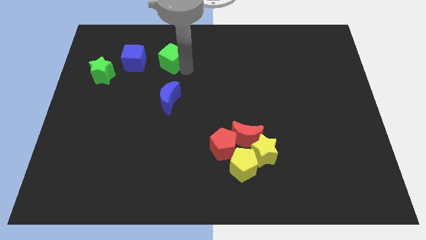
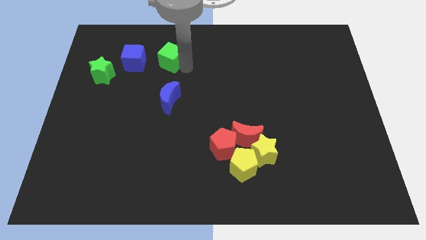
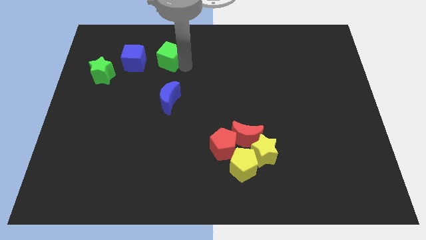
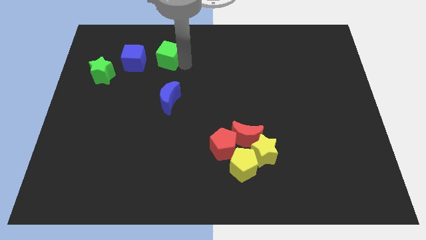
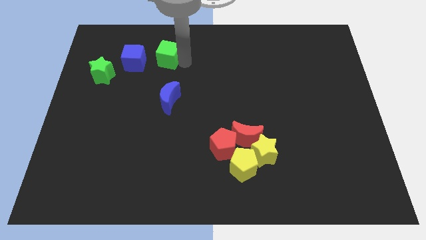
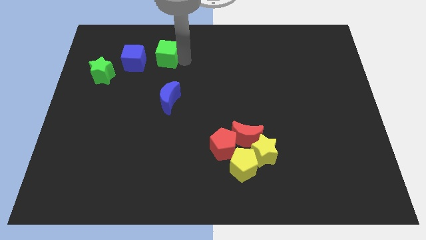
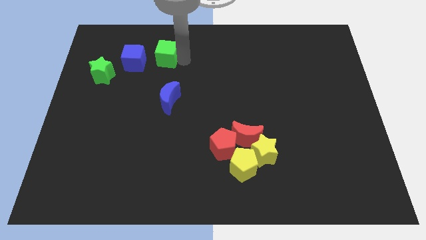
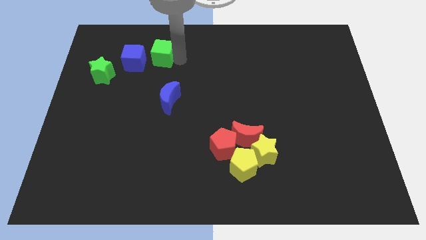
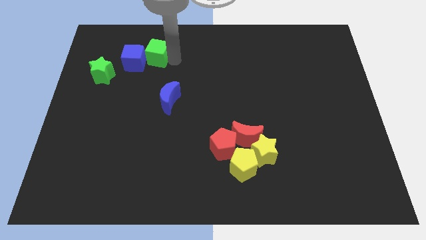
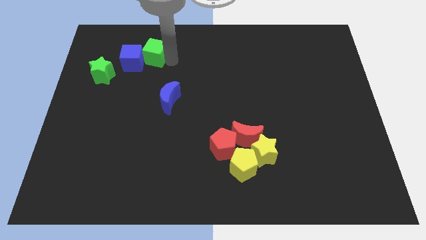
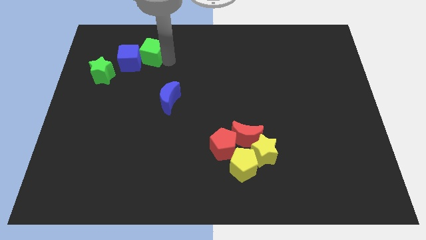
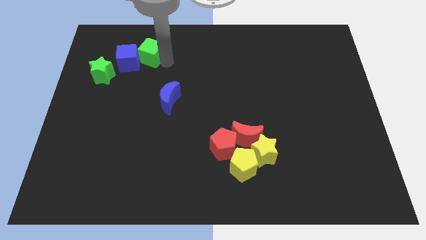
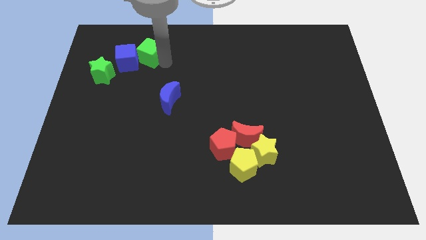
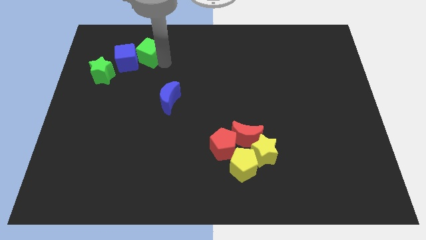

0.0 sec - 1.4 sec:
move the green cube close to the blue cube

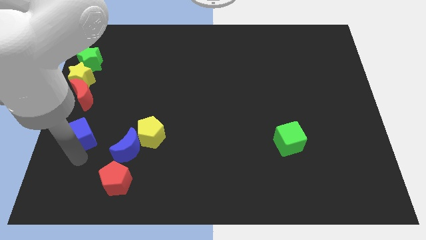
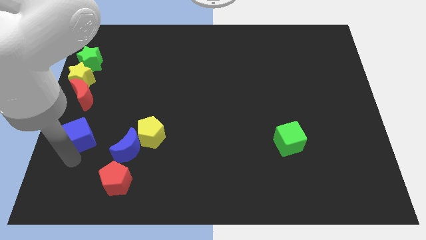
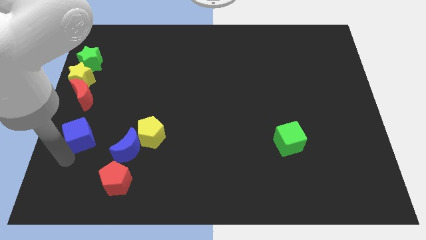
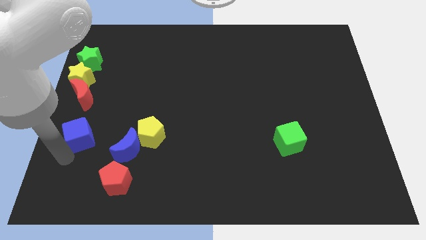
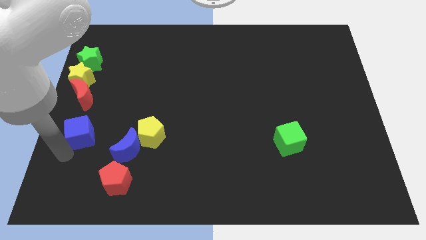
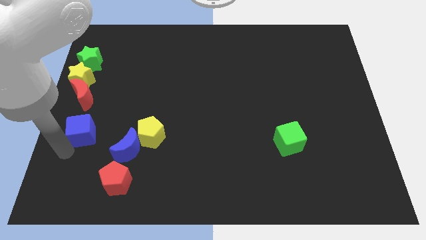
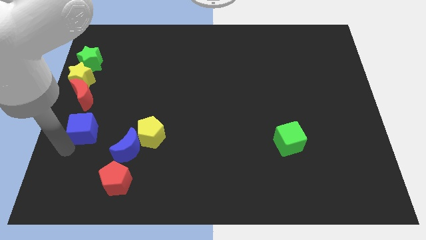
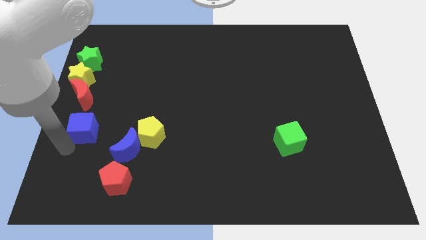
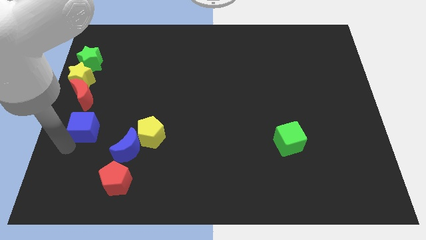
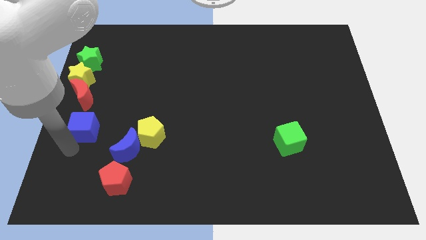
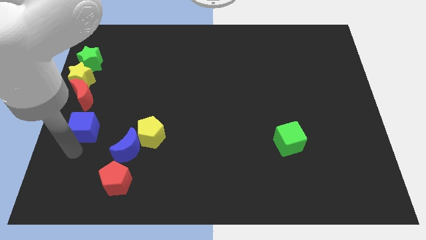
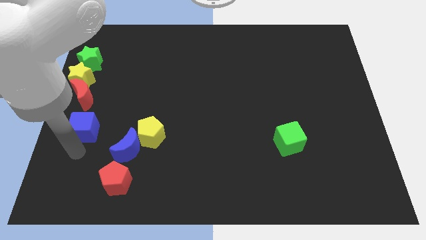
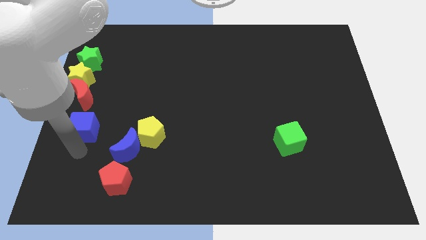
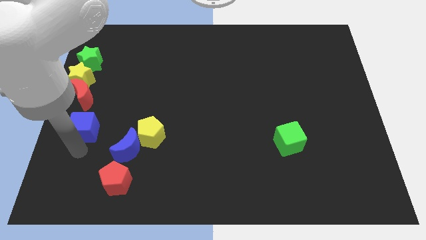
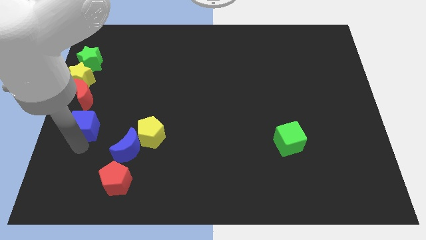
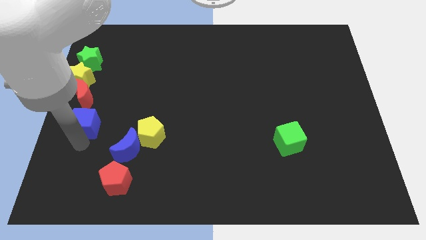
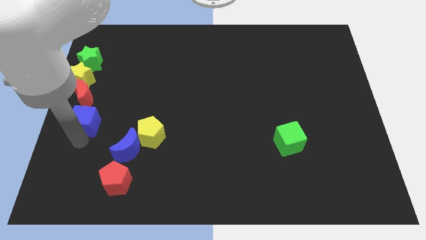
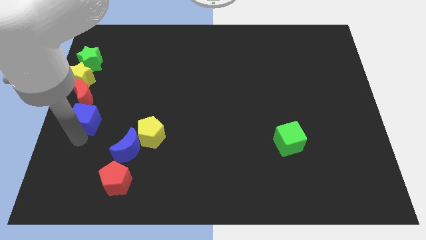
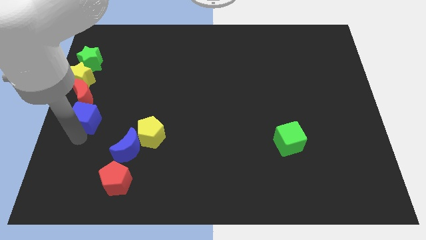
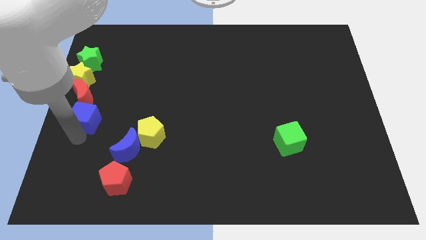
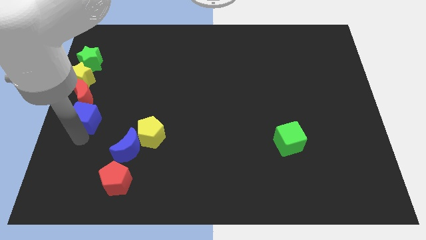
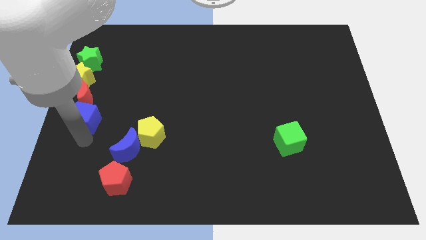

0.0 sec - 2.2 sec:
move blue cube below red crescent

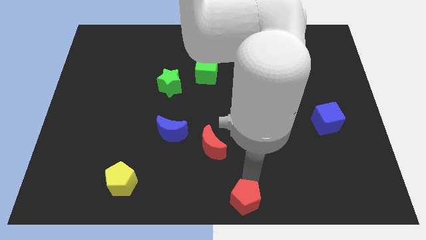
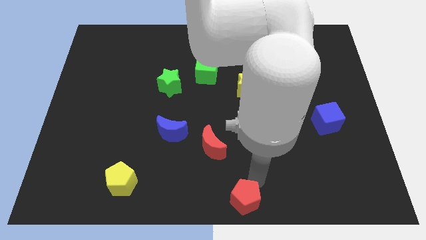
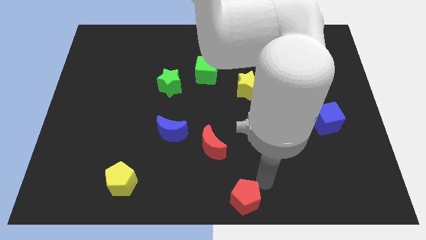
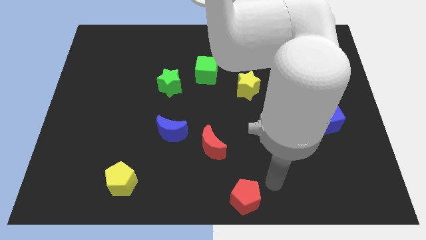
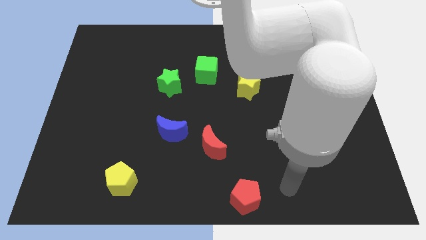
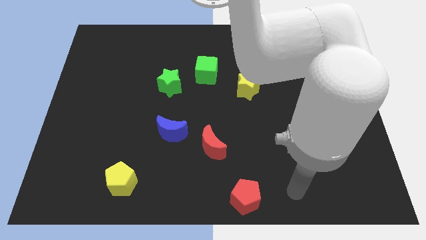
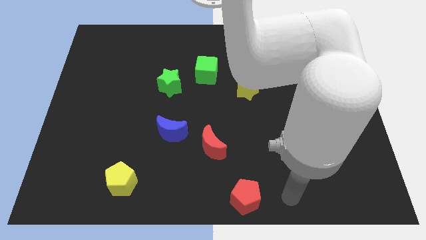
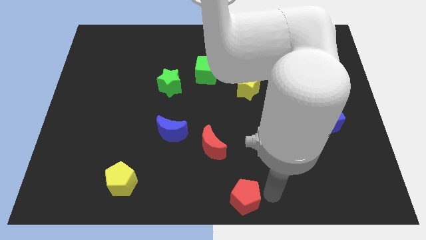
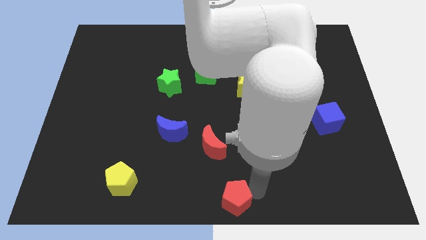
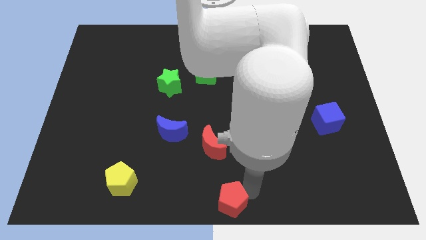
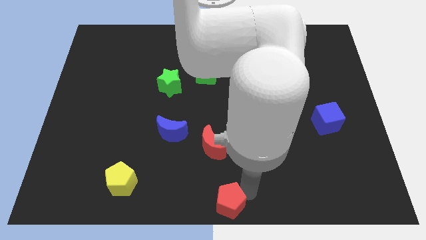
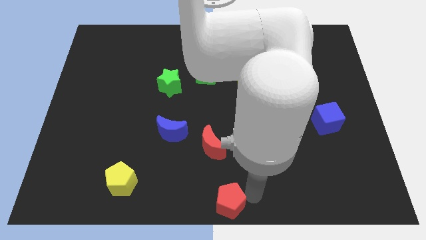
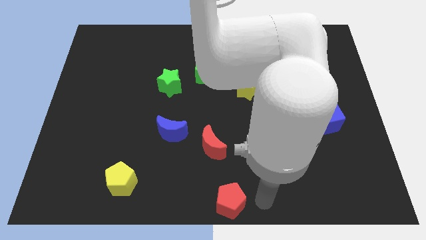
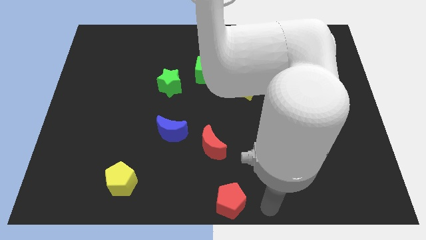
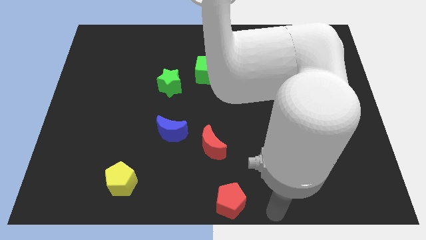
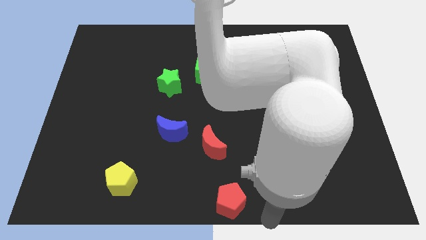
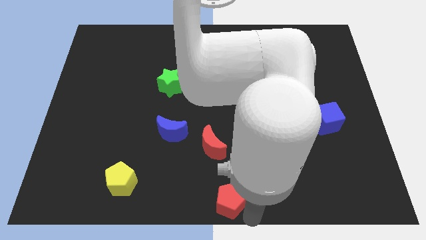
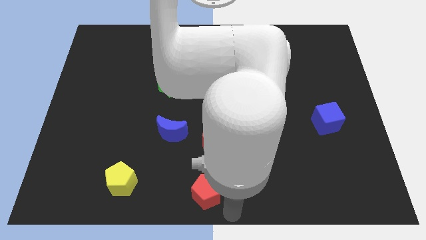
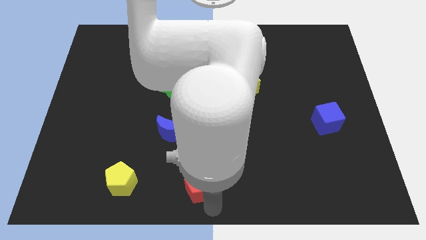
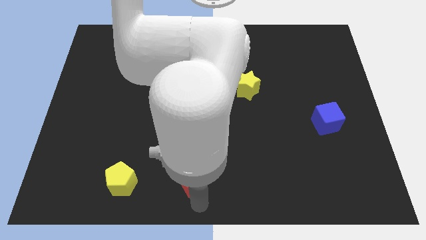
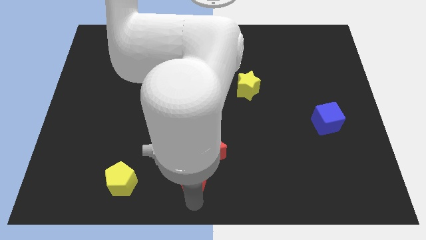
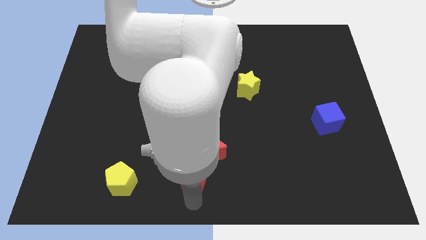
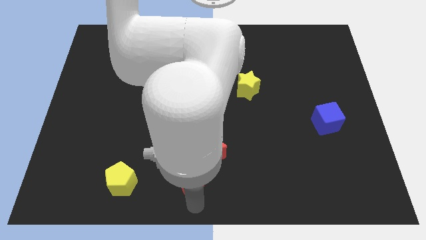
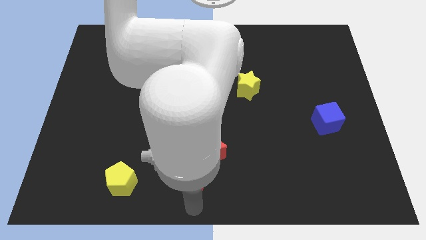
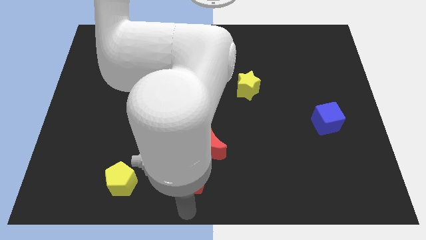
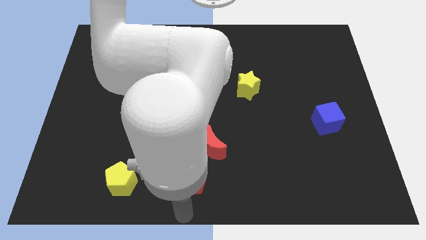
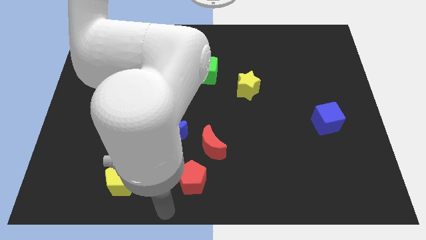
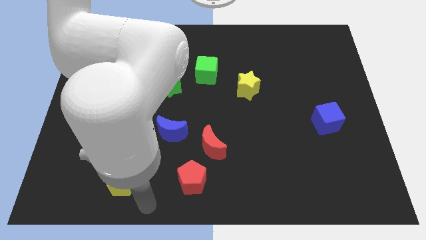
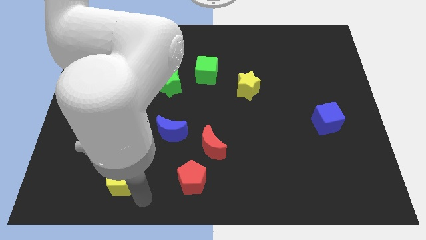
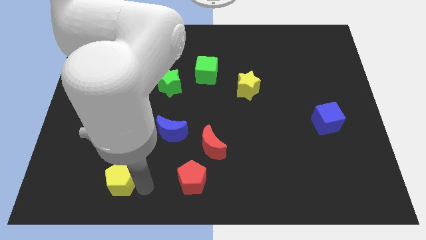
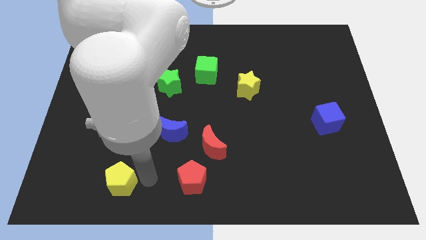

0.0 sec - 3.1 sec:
place the red pentagon parallel to yellow pentagon

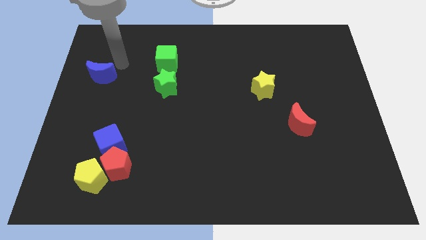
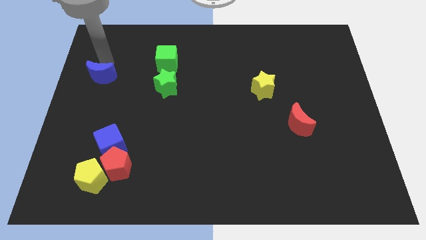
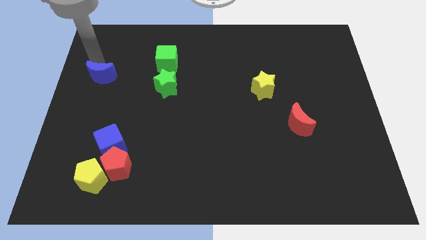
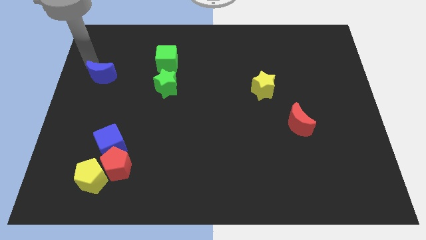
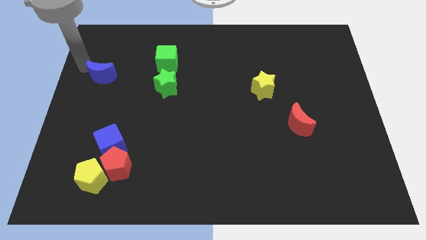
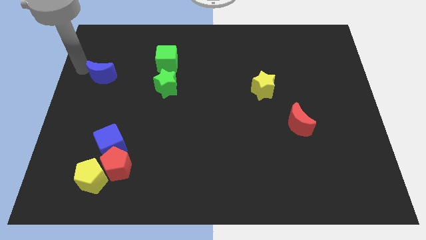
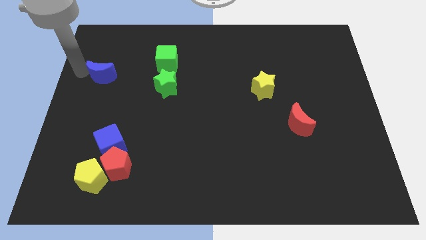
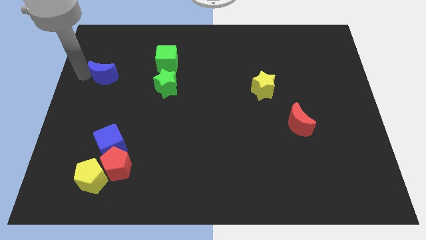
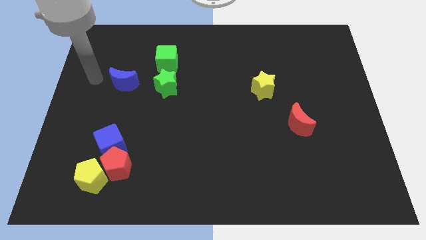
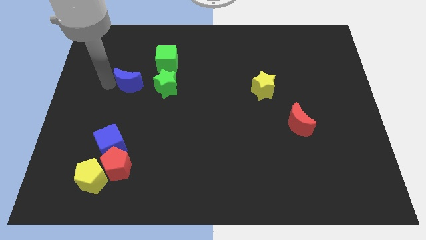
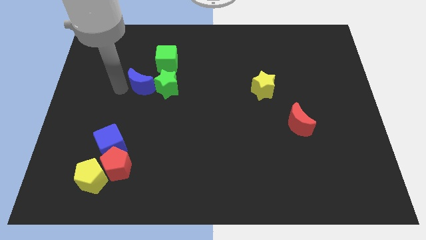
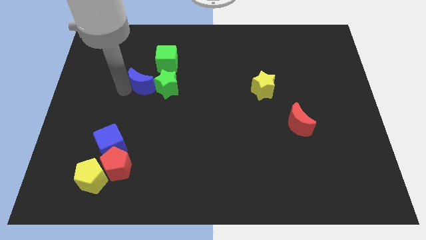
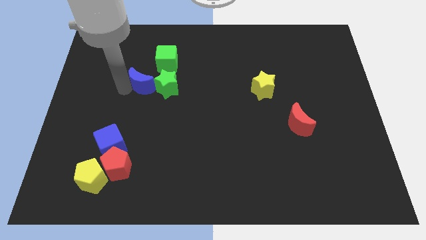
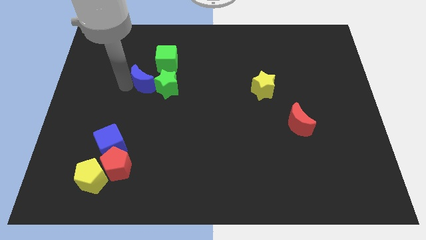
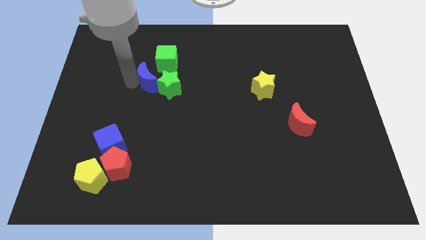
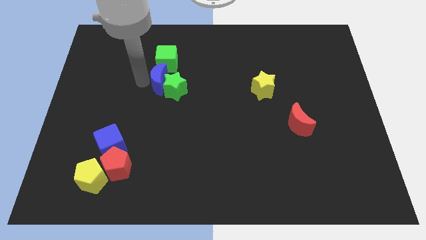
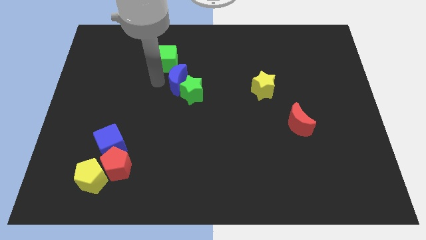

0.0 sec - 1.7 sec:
push blue crescent below green cube

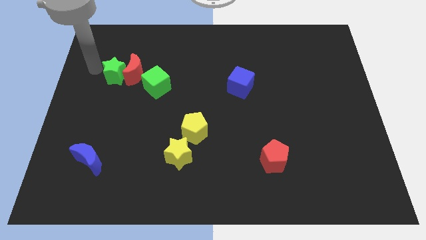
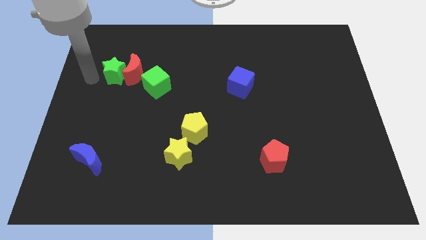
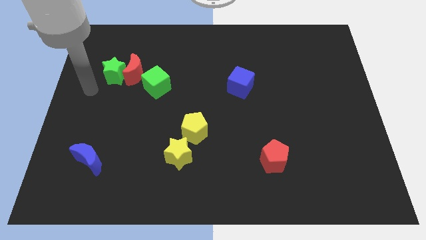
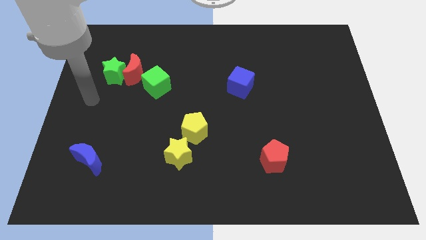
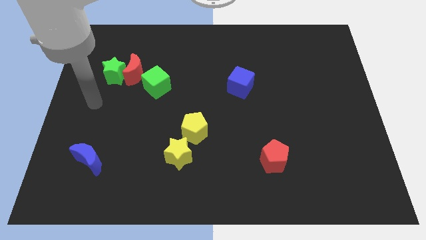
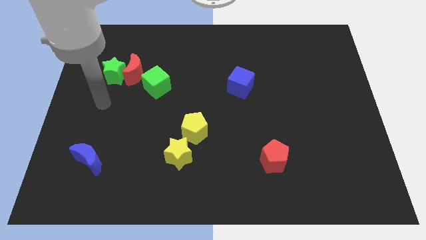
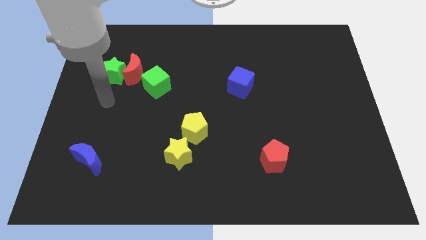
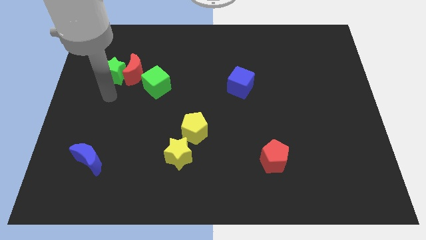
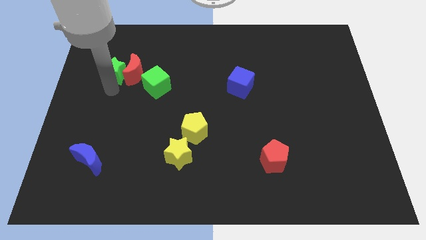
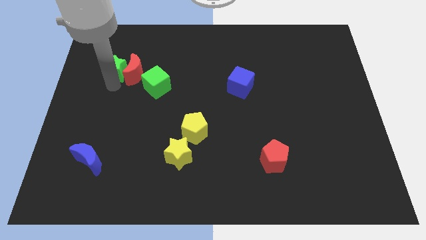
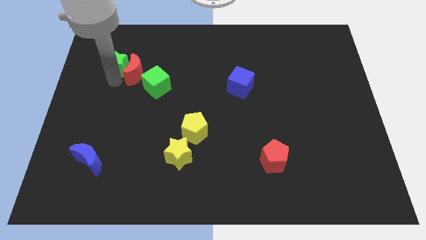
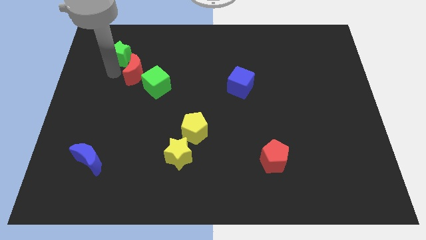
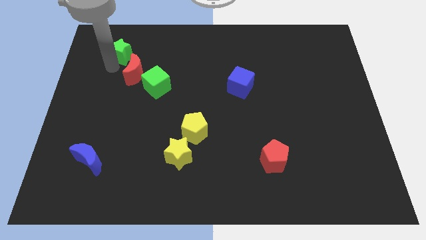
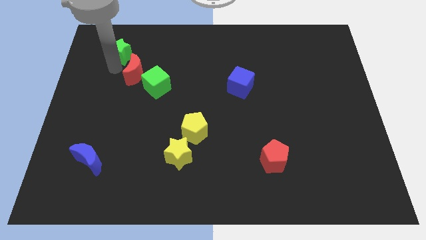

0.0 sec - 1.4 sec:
push the green star slightly upwards
